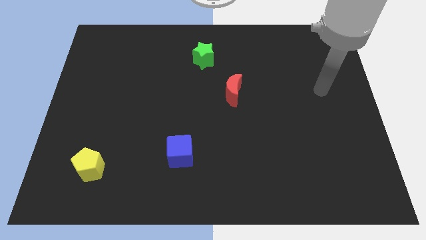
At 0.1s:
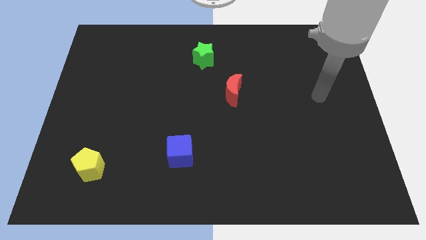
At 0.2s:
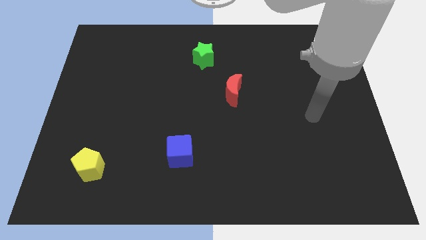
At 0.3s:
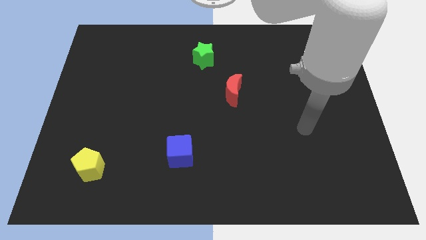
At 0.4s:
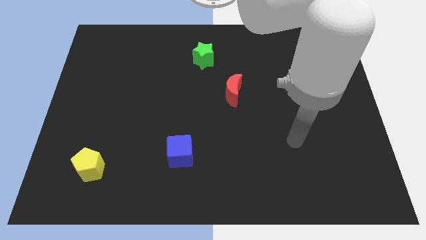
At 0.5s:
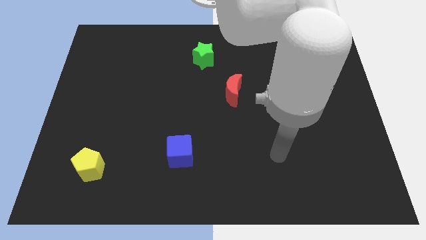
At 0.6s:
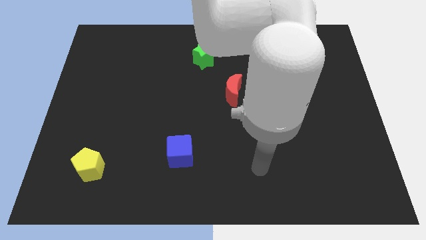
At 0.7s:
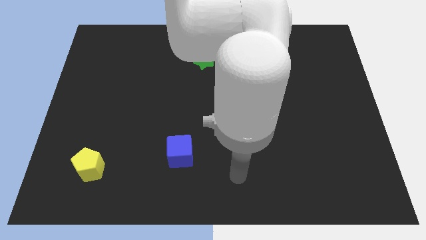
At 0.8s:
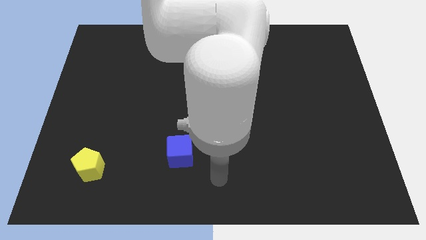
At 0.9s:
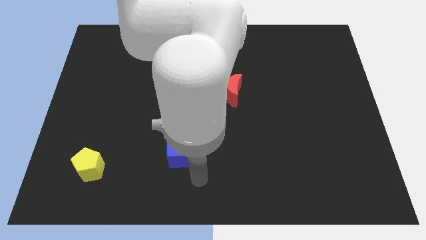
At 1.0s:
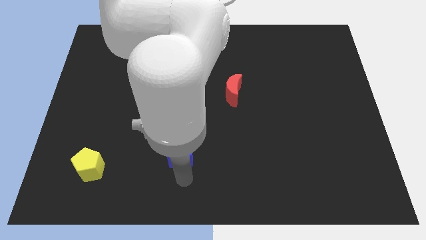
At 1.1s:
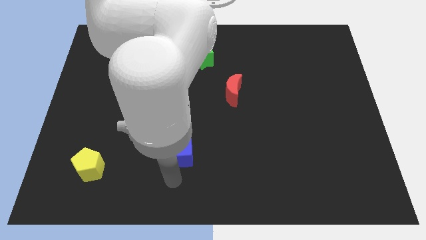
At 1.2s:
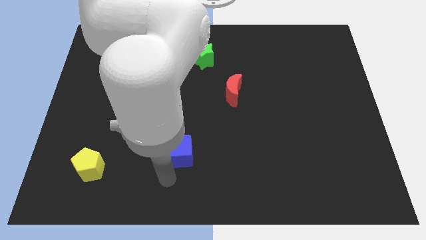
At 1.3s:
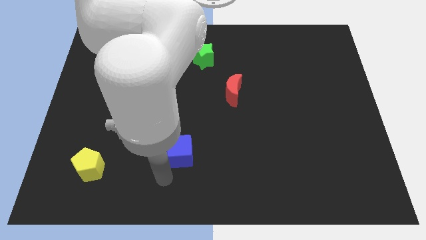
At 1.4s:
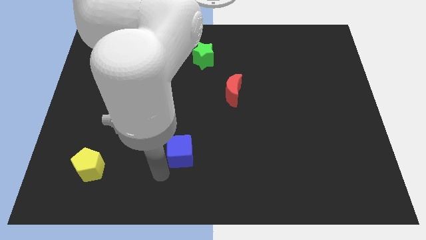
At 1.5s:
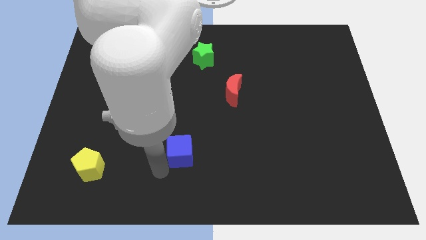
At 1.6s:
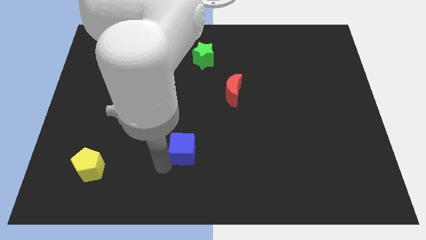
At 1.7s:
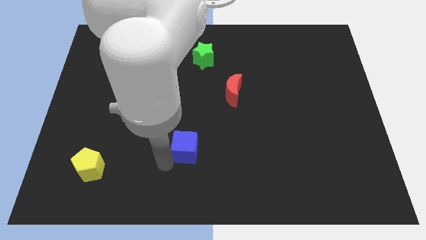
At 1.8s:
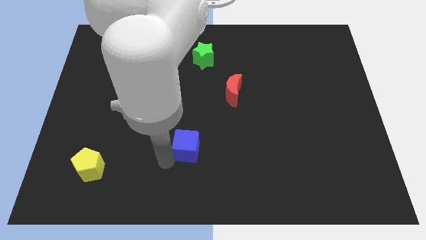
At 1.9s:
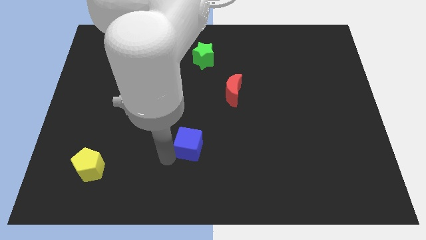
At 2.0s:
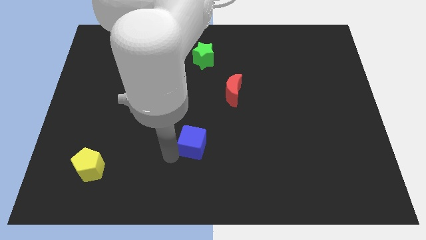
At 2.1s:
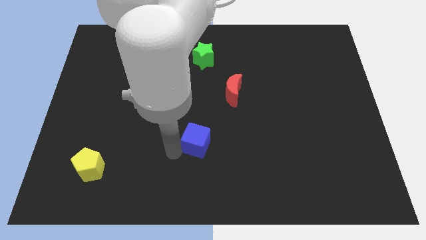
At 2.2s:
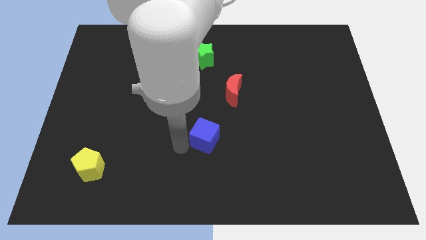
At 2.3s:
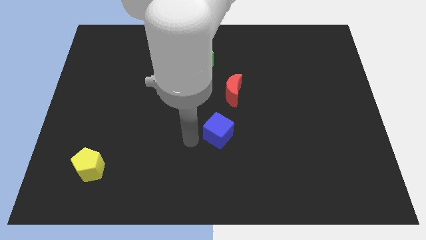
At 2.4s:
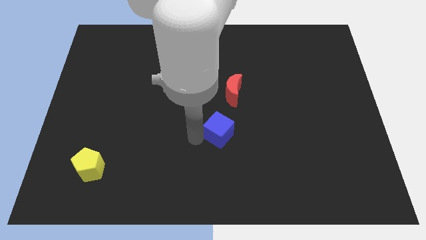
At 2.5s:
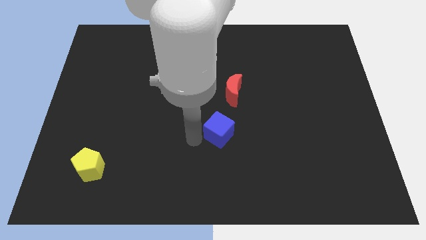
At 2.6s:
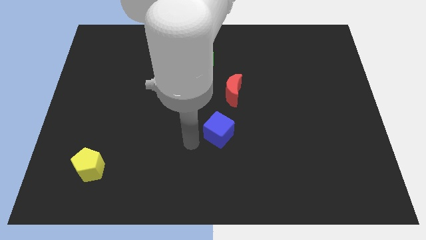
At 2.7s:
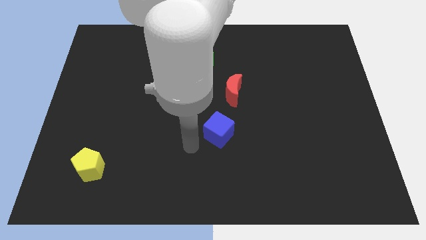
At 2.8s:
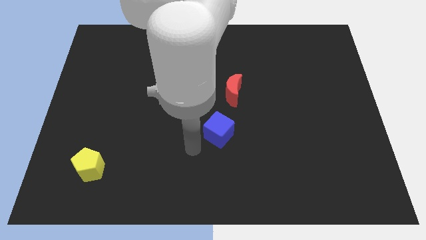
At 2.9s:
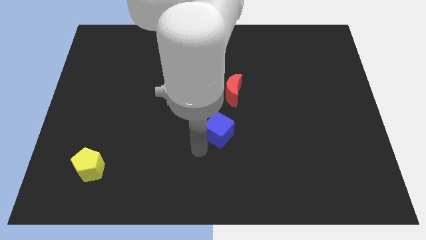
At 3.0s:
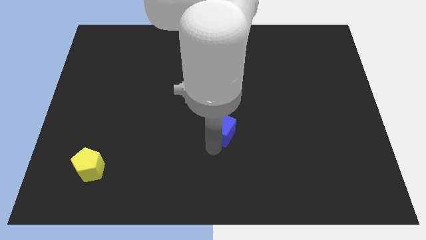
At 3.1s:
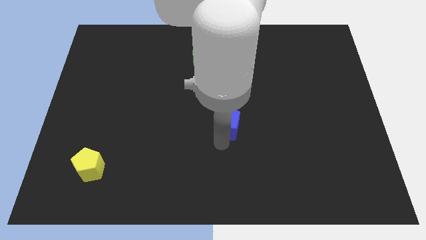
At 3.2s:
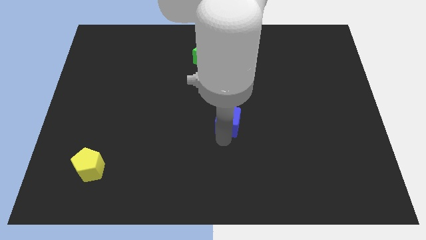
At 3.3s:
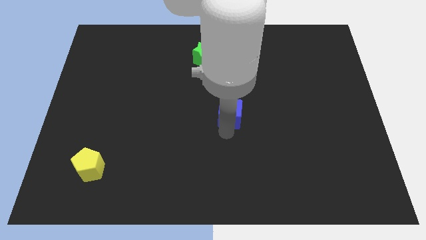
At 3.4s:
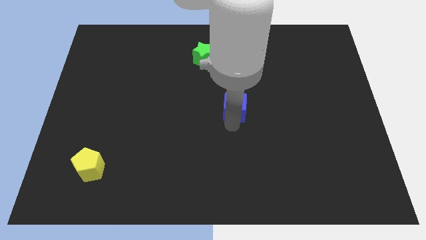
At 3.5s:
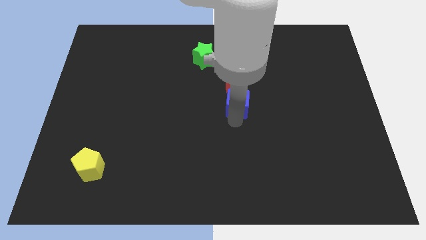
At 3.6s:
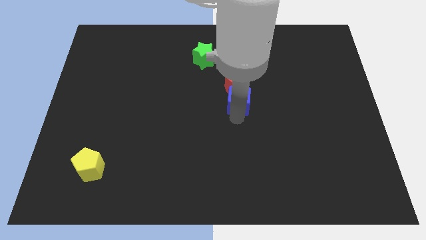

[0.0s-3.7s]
put the blue cube to the red moon

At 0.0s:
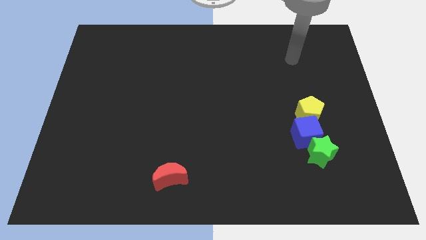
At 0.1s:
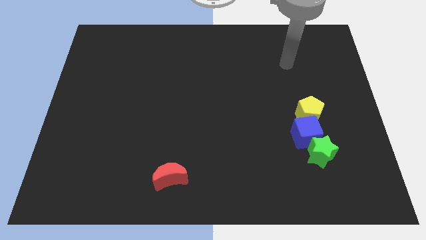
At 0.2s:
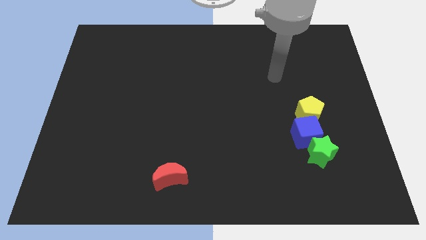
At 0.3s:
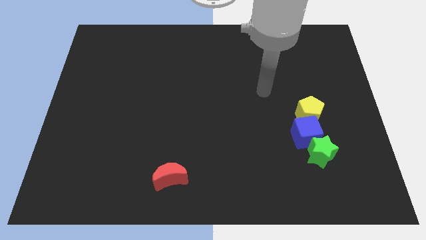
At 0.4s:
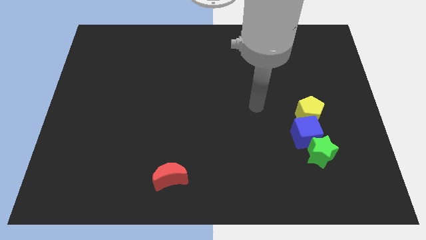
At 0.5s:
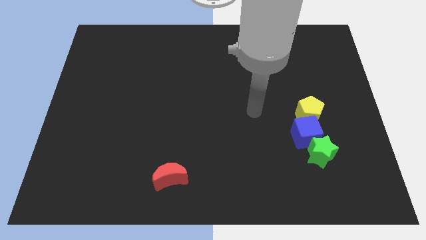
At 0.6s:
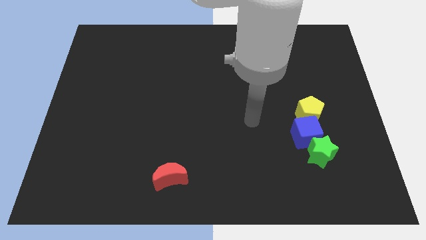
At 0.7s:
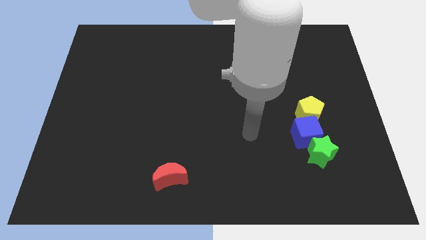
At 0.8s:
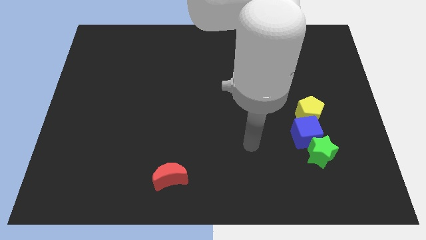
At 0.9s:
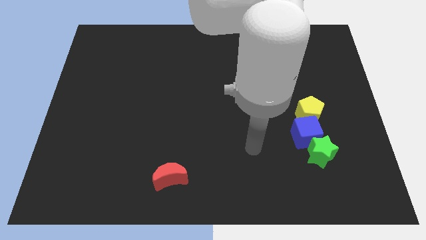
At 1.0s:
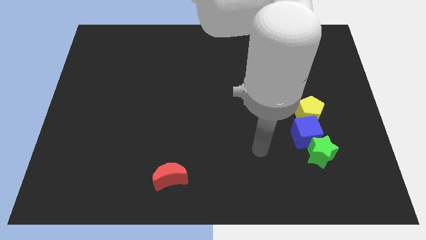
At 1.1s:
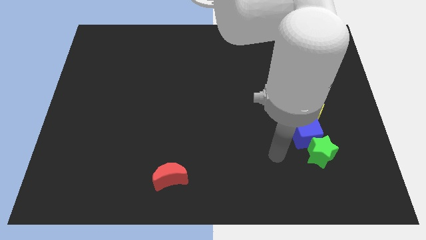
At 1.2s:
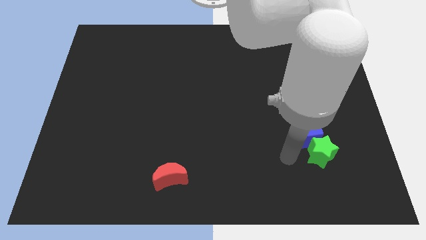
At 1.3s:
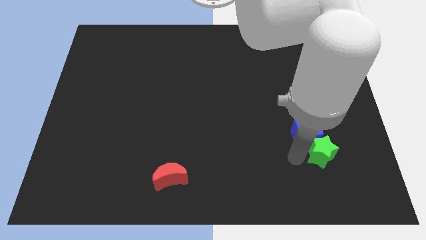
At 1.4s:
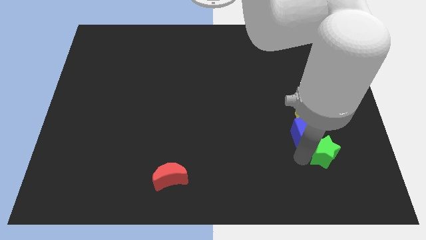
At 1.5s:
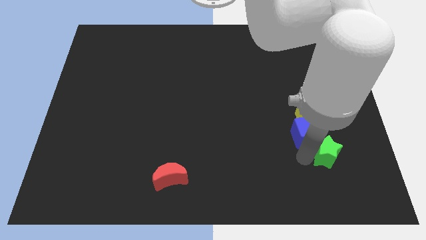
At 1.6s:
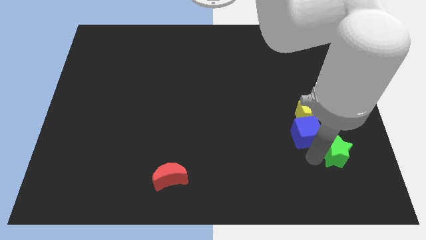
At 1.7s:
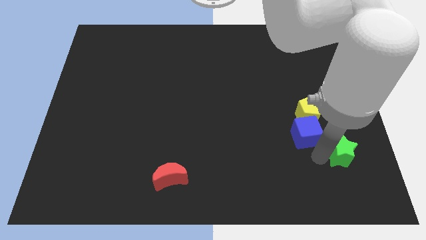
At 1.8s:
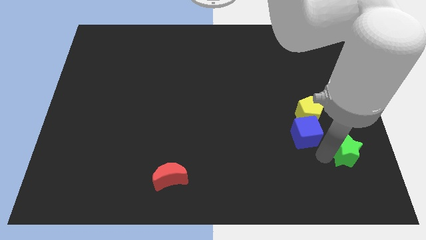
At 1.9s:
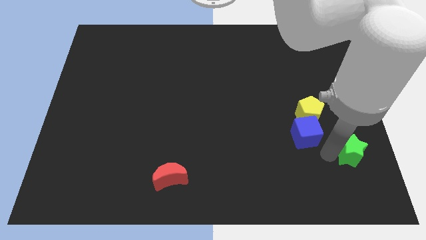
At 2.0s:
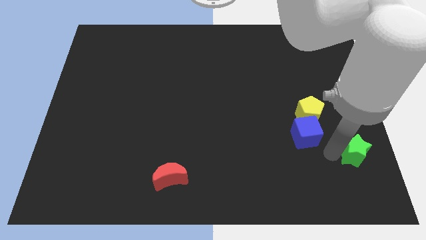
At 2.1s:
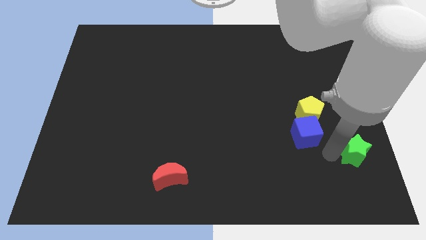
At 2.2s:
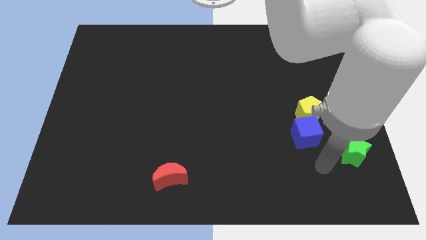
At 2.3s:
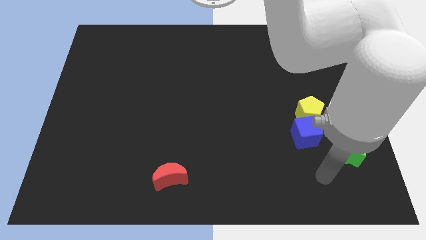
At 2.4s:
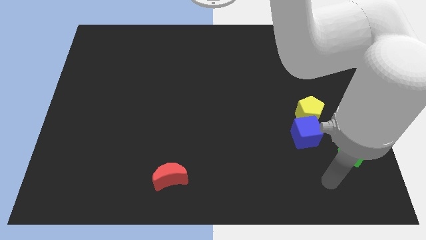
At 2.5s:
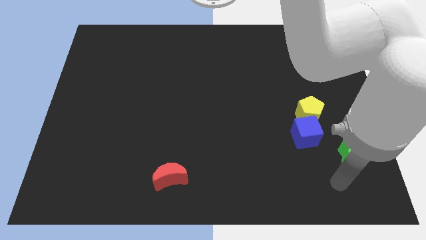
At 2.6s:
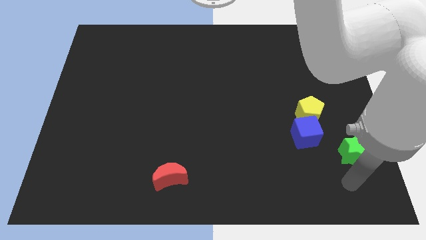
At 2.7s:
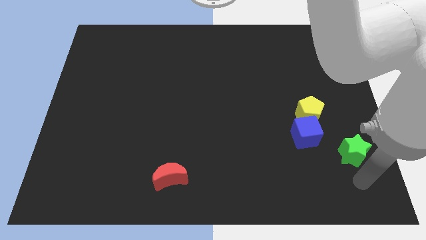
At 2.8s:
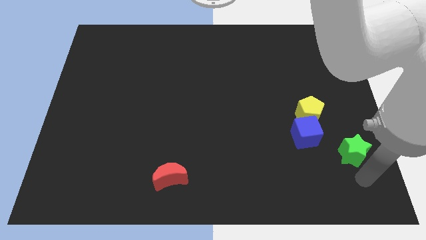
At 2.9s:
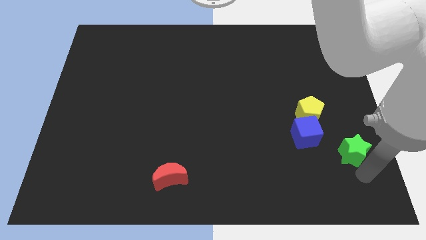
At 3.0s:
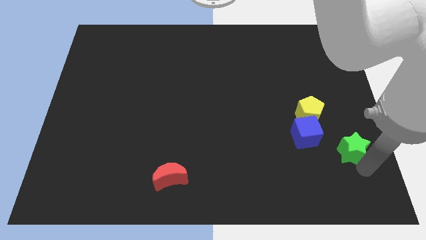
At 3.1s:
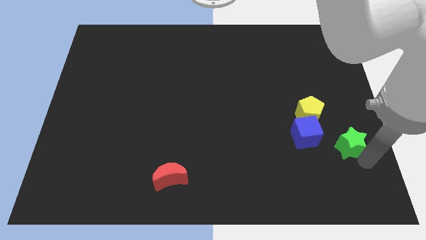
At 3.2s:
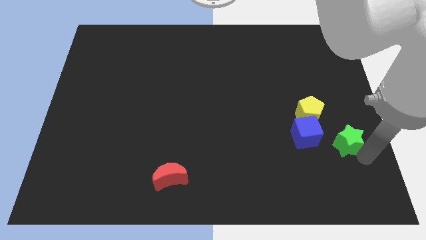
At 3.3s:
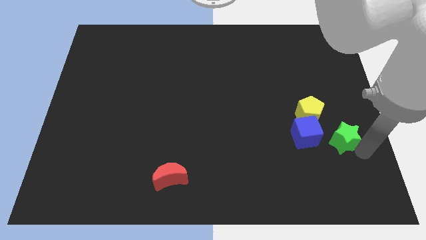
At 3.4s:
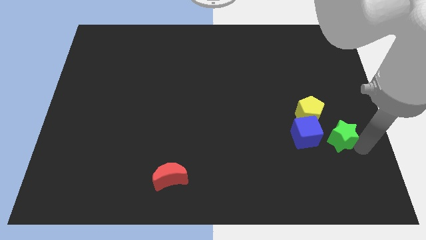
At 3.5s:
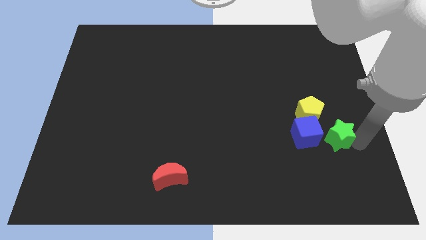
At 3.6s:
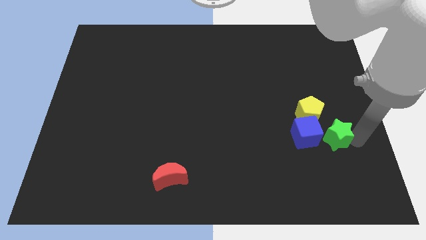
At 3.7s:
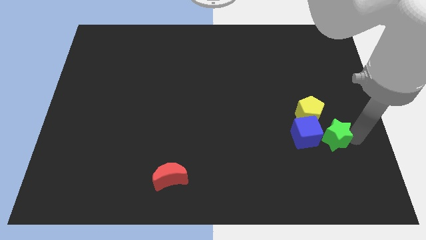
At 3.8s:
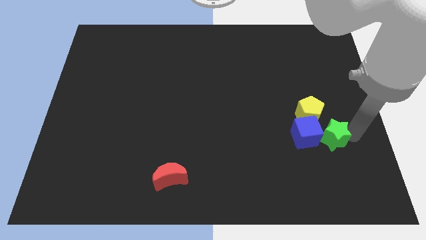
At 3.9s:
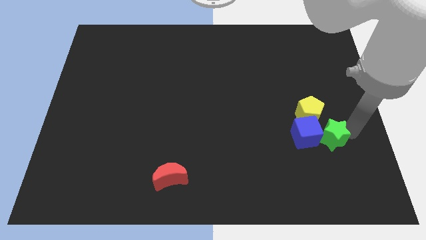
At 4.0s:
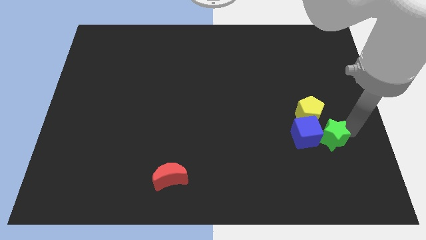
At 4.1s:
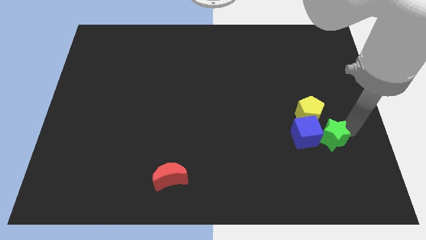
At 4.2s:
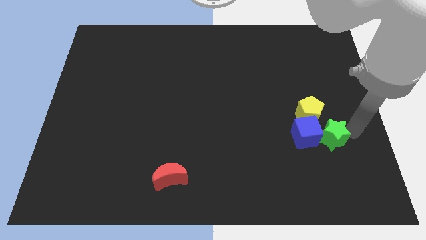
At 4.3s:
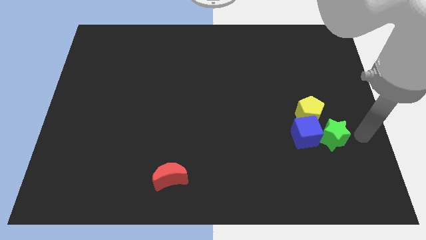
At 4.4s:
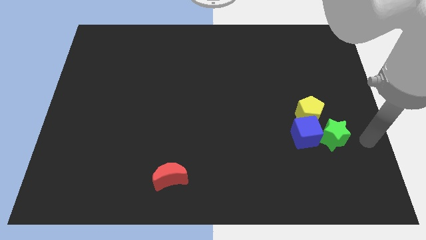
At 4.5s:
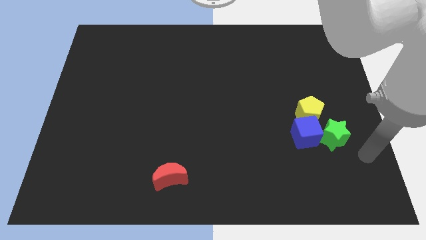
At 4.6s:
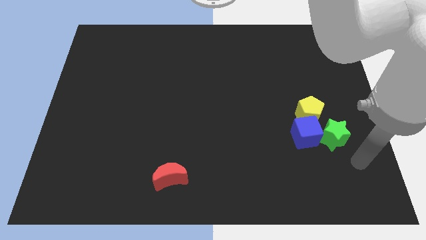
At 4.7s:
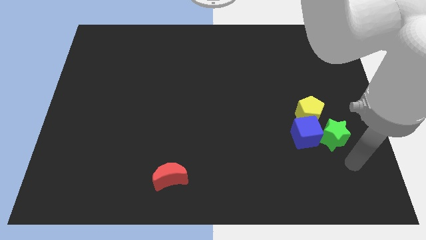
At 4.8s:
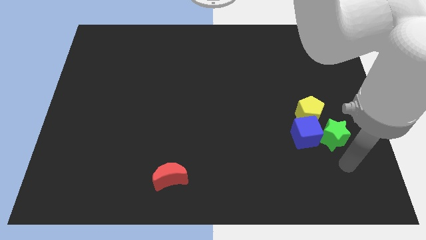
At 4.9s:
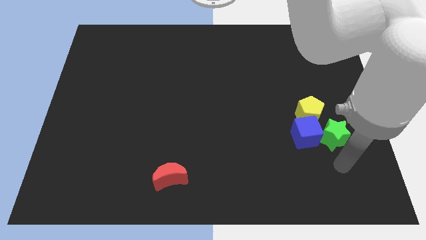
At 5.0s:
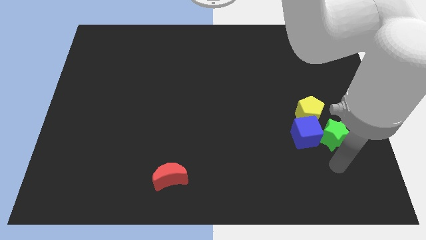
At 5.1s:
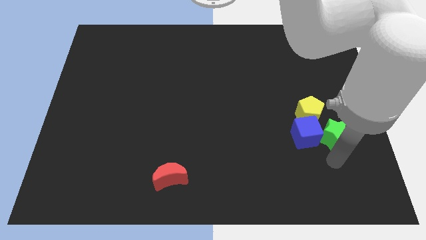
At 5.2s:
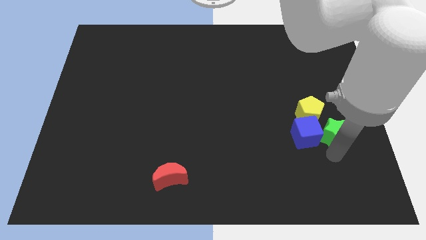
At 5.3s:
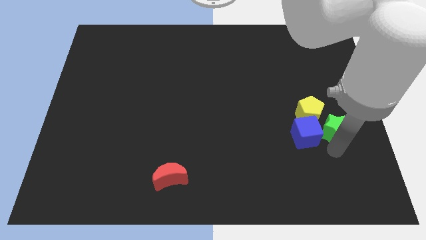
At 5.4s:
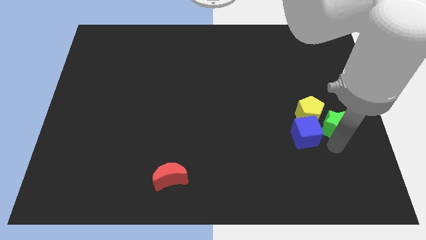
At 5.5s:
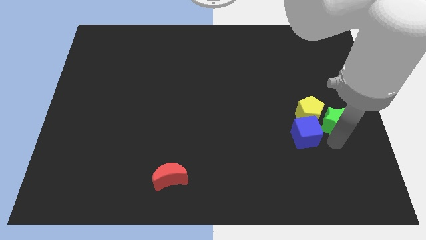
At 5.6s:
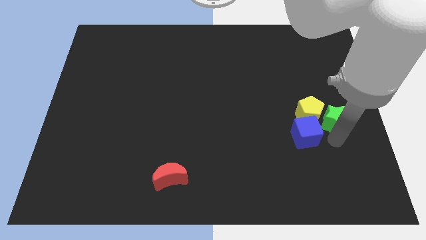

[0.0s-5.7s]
push the green star to the yellow block
